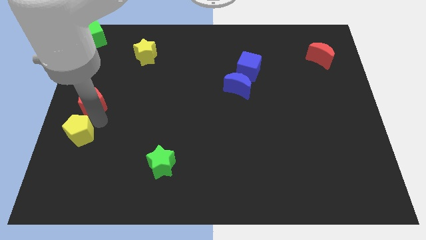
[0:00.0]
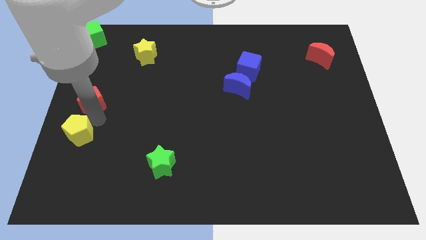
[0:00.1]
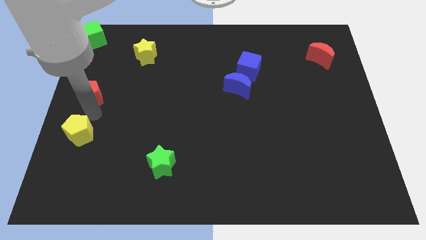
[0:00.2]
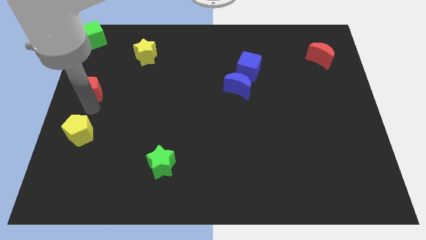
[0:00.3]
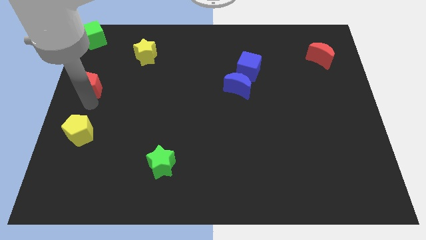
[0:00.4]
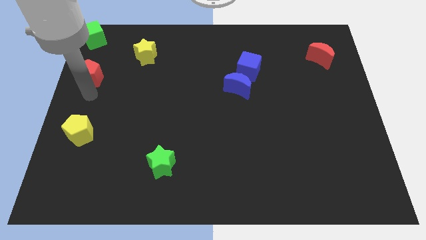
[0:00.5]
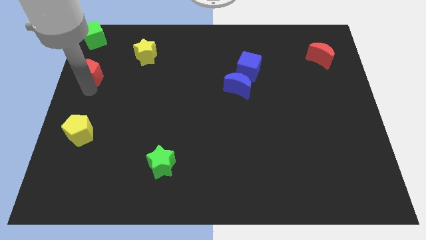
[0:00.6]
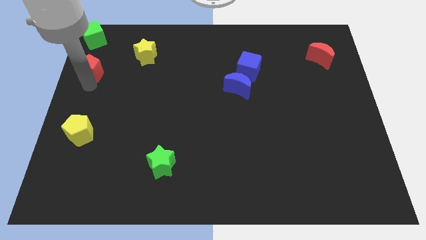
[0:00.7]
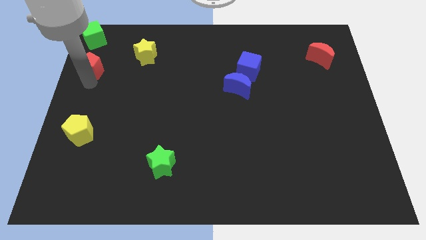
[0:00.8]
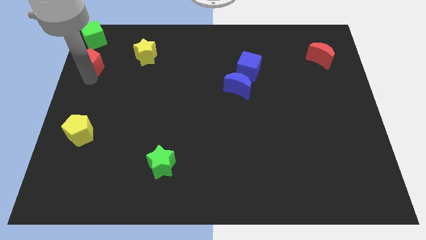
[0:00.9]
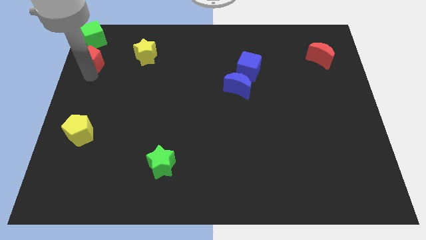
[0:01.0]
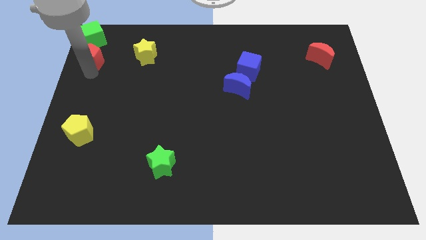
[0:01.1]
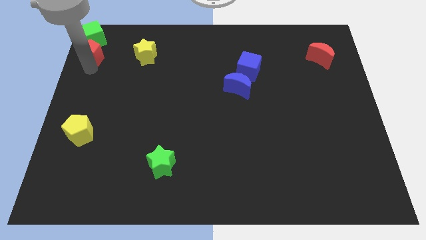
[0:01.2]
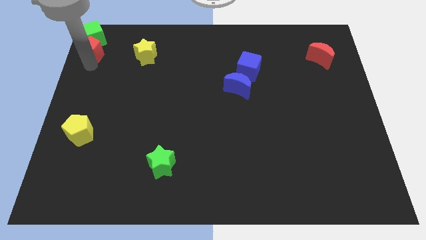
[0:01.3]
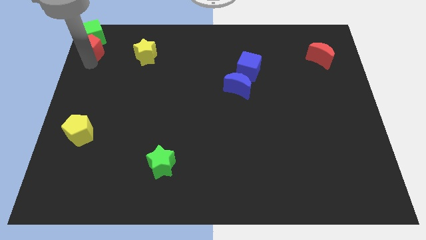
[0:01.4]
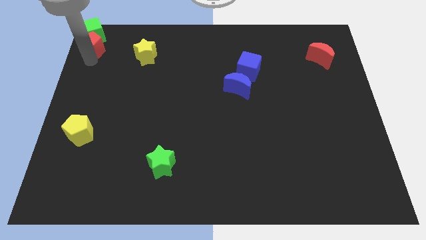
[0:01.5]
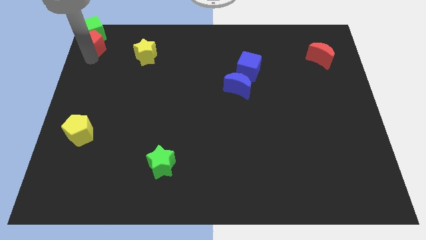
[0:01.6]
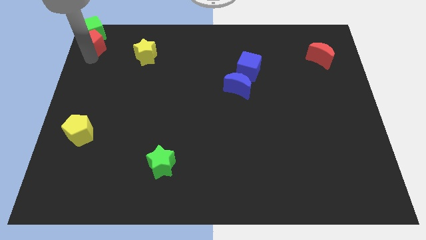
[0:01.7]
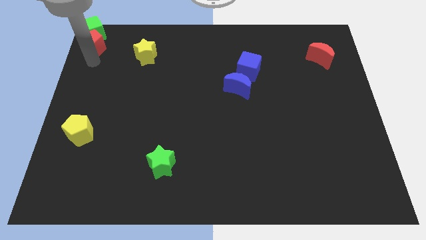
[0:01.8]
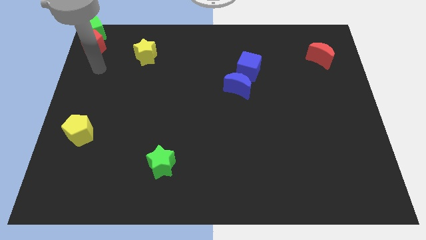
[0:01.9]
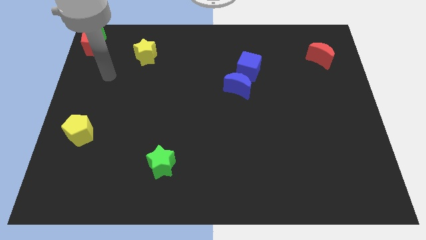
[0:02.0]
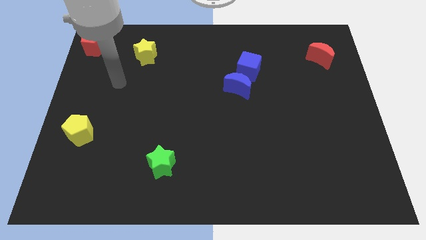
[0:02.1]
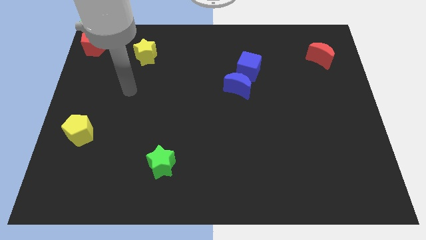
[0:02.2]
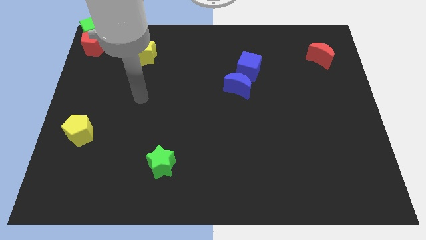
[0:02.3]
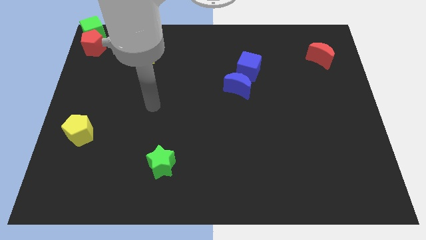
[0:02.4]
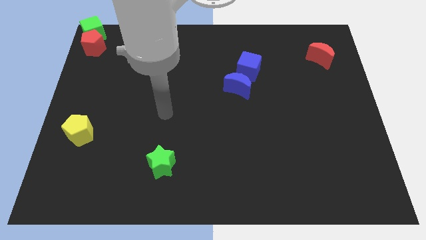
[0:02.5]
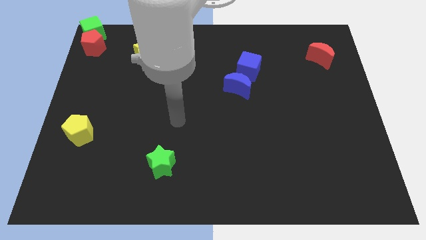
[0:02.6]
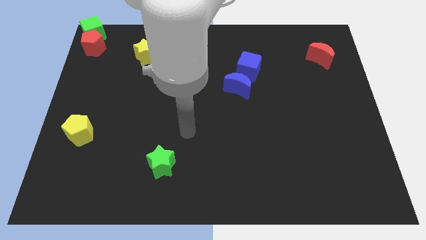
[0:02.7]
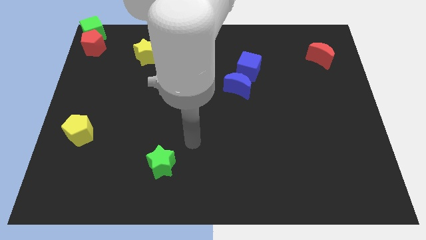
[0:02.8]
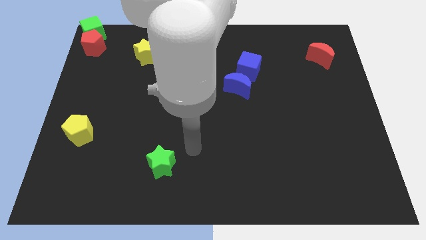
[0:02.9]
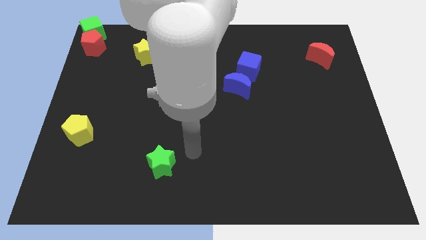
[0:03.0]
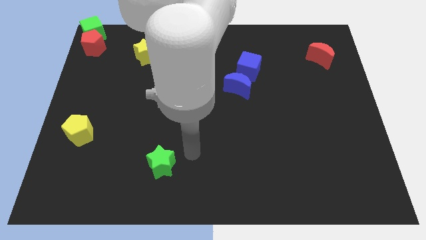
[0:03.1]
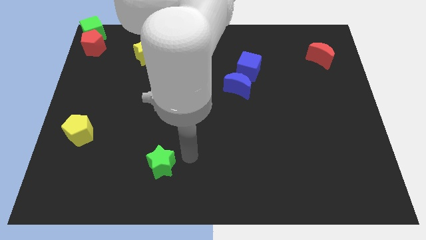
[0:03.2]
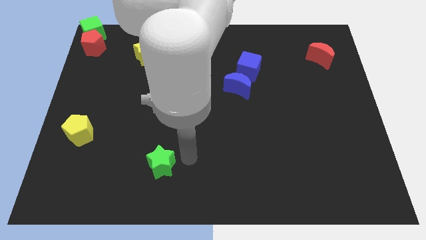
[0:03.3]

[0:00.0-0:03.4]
push the red pentagon to the bottom of the green cube

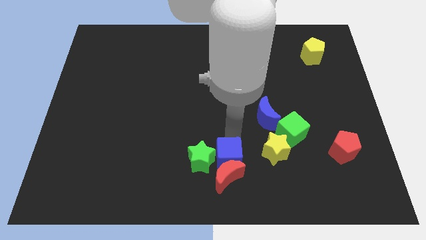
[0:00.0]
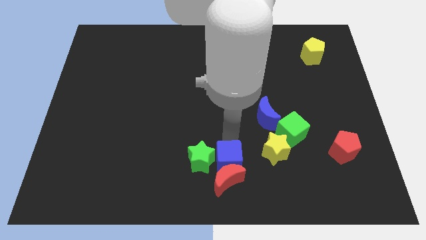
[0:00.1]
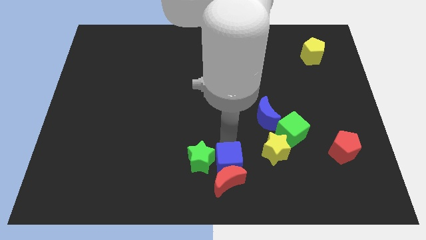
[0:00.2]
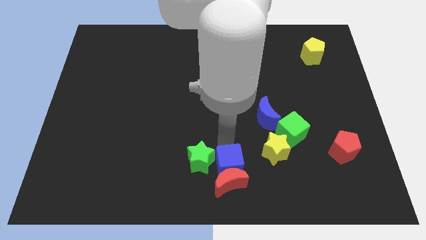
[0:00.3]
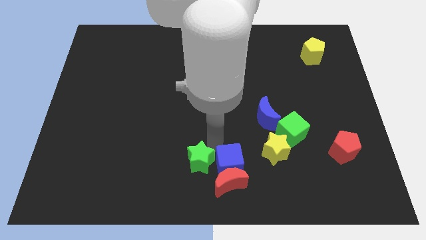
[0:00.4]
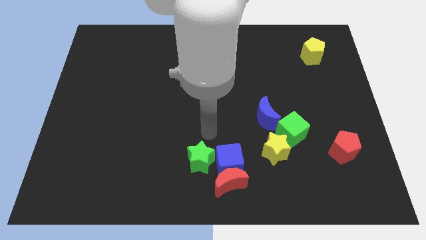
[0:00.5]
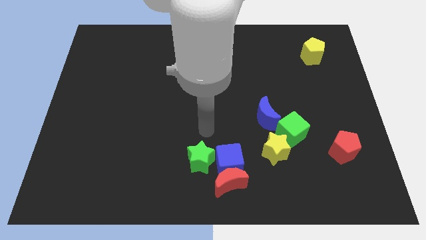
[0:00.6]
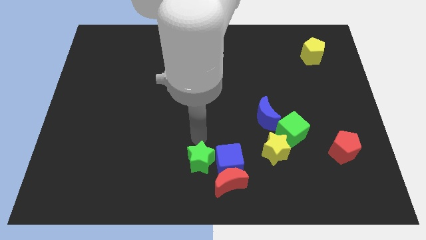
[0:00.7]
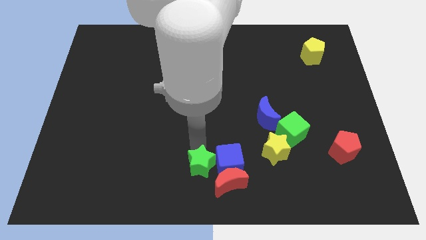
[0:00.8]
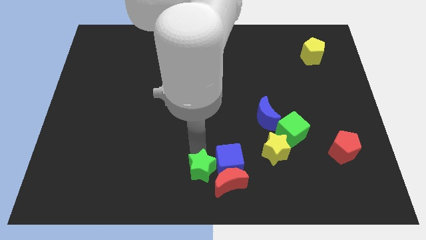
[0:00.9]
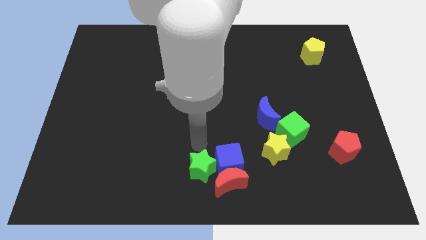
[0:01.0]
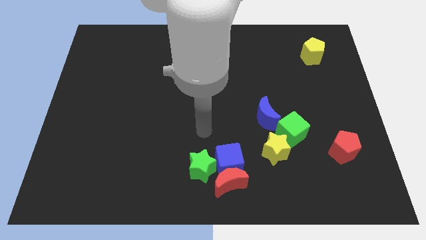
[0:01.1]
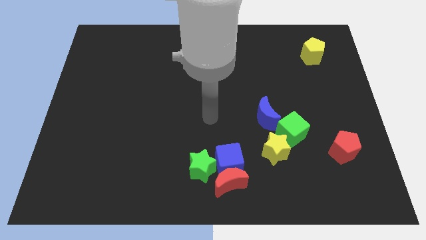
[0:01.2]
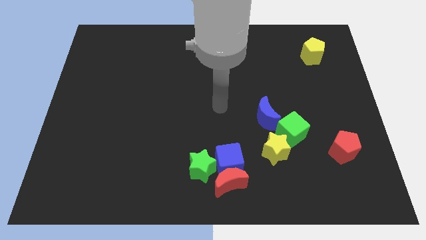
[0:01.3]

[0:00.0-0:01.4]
push the blue cube green star and red pentagon towards the bottom side of the board

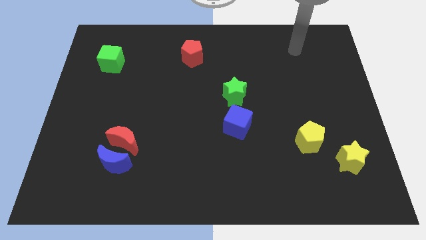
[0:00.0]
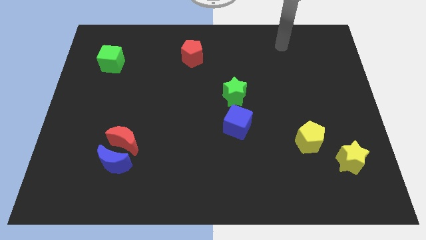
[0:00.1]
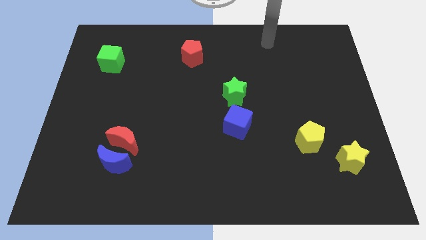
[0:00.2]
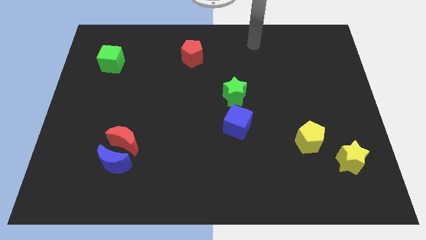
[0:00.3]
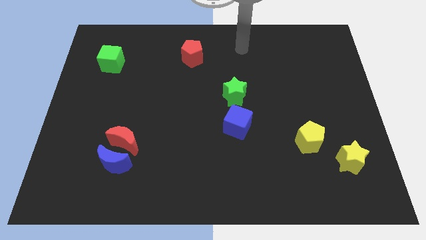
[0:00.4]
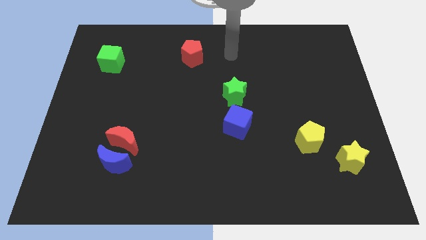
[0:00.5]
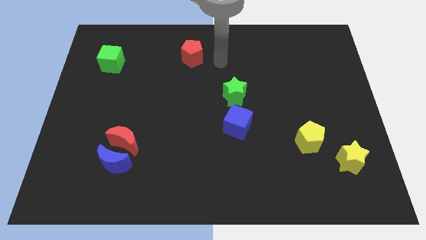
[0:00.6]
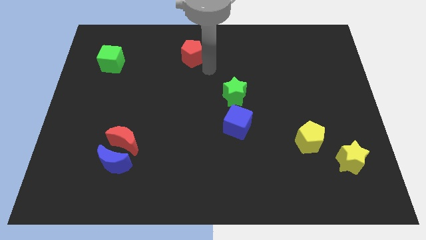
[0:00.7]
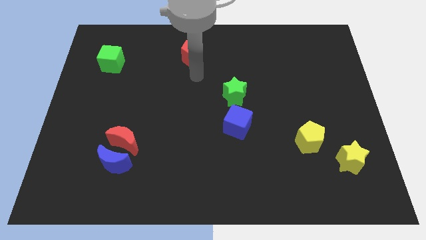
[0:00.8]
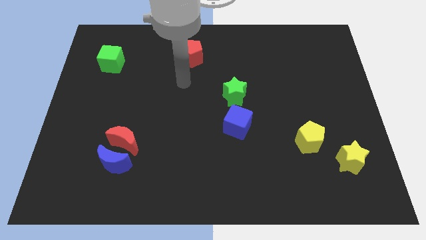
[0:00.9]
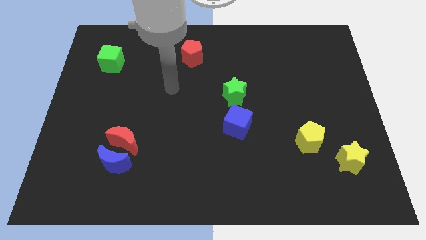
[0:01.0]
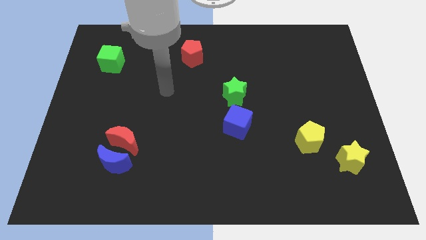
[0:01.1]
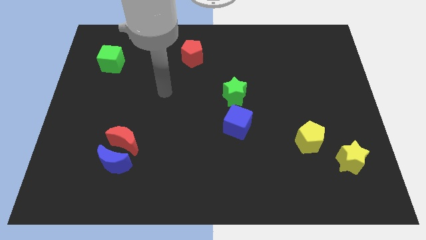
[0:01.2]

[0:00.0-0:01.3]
move your arm between the red pentagon and red moon

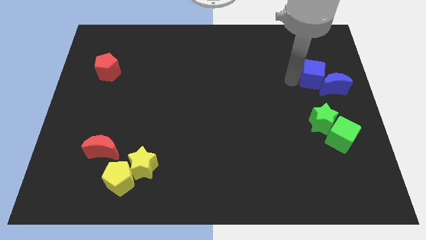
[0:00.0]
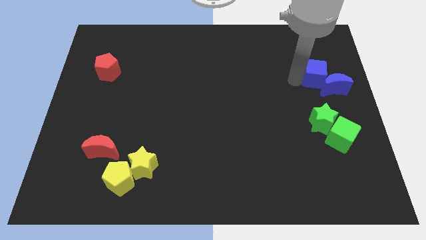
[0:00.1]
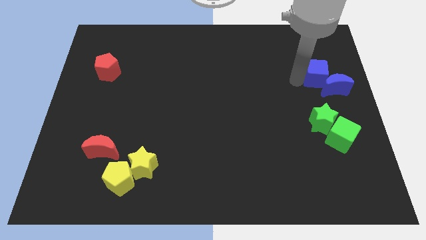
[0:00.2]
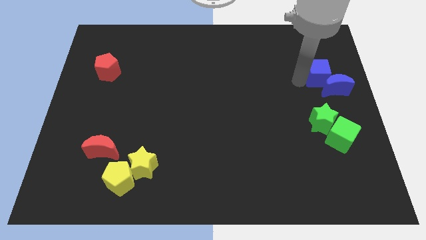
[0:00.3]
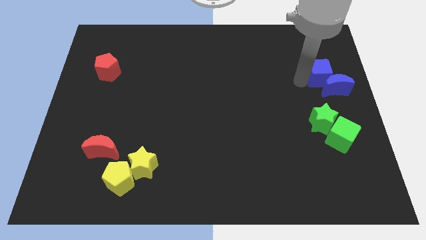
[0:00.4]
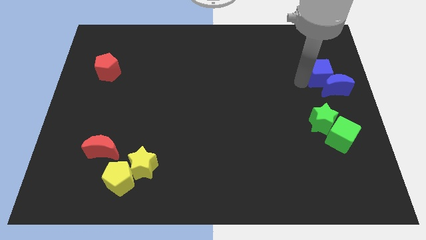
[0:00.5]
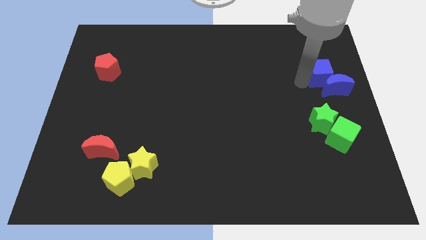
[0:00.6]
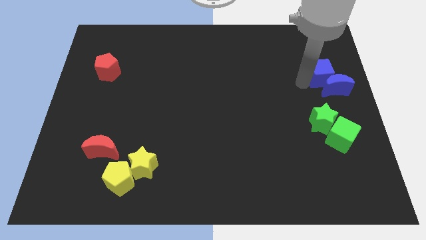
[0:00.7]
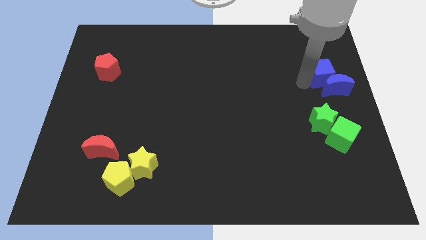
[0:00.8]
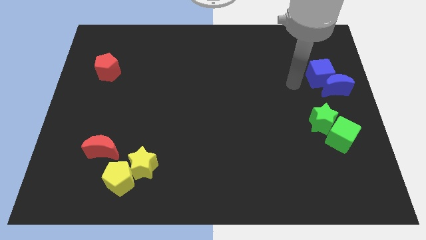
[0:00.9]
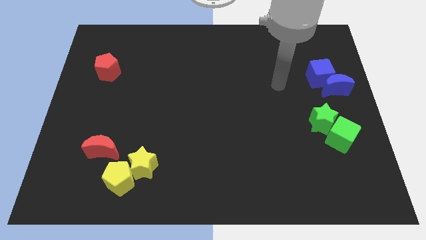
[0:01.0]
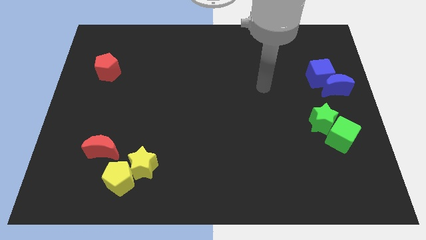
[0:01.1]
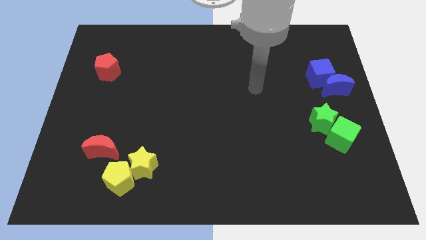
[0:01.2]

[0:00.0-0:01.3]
move the blue blocks to center right

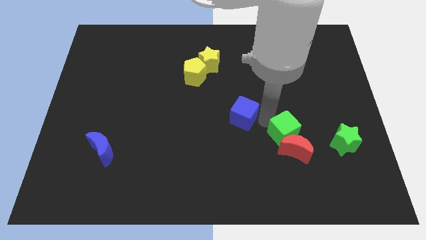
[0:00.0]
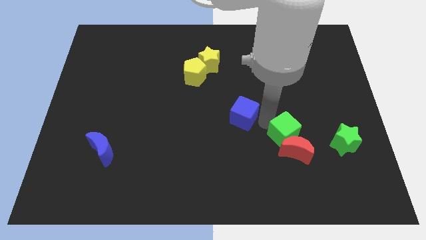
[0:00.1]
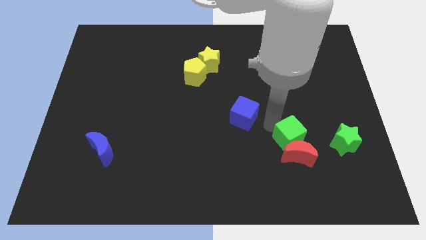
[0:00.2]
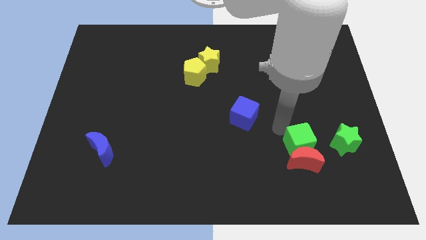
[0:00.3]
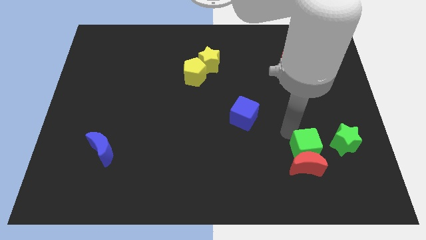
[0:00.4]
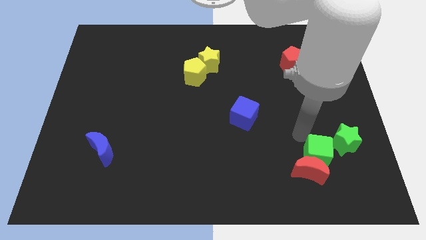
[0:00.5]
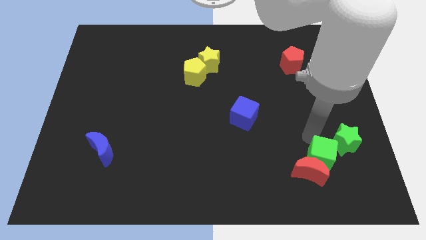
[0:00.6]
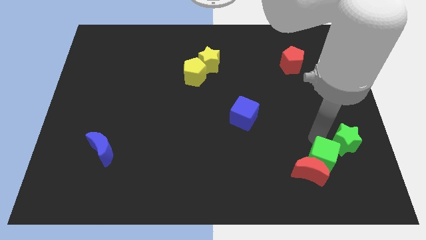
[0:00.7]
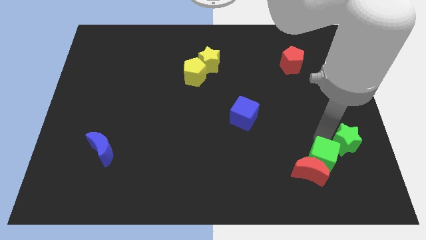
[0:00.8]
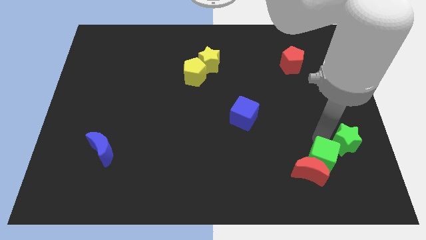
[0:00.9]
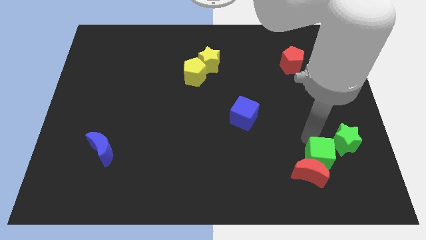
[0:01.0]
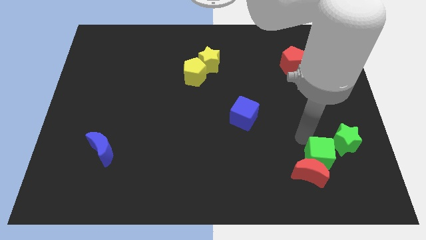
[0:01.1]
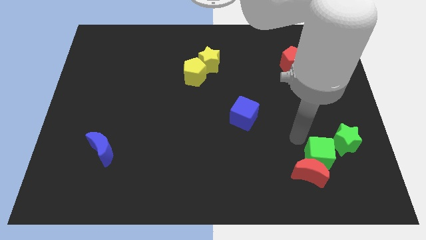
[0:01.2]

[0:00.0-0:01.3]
push the green cube and the red moon to the bottom left side of the green star

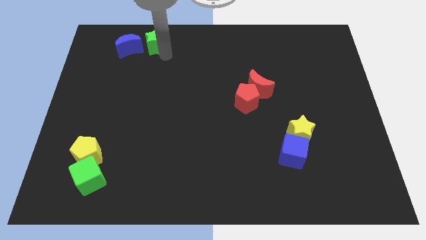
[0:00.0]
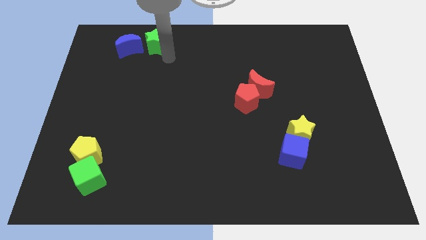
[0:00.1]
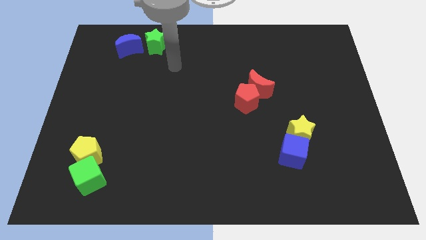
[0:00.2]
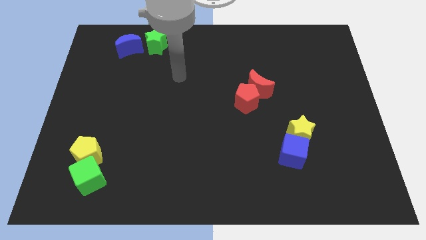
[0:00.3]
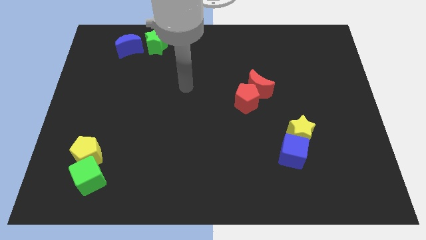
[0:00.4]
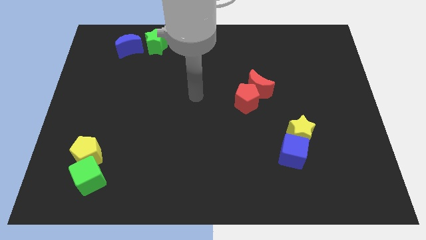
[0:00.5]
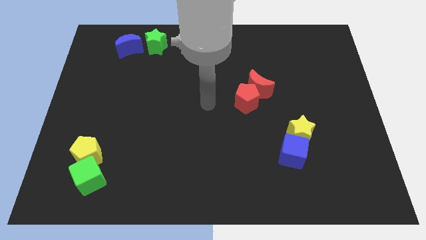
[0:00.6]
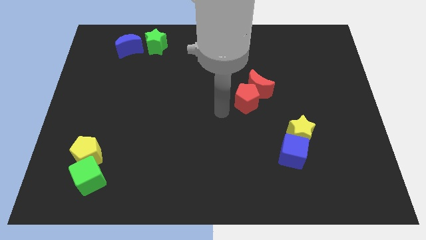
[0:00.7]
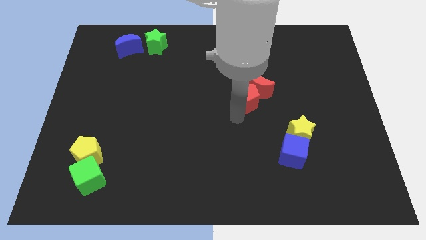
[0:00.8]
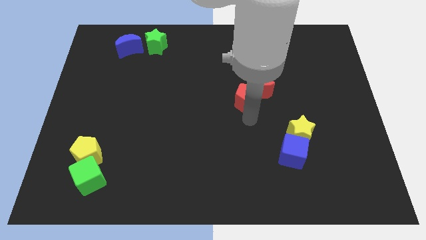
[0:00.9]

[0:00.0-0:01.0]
move your arm away from the green star
